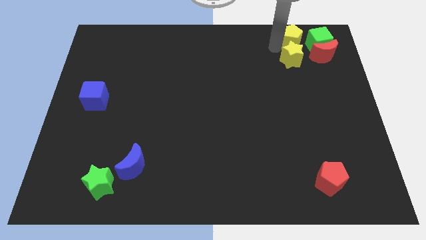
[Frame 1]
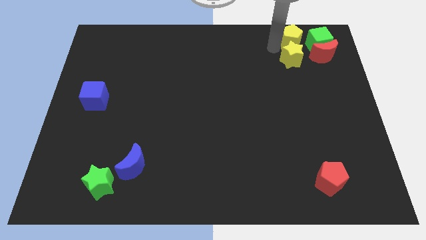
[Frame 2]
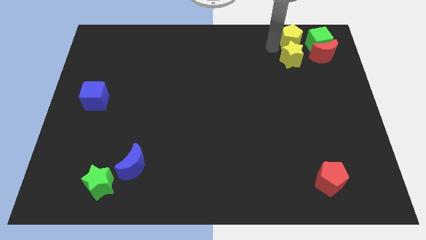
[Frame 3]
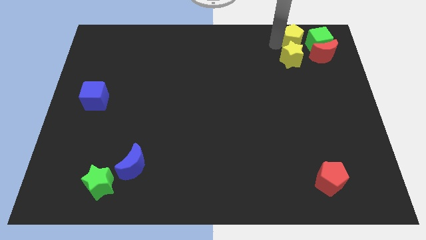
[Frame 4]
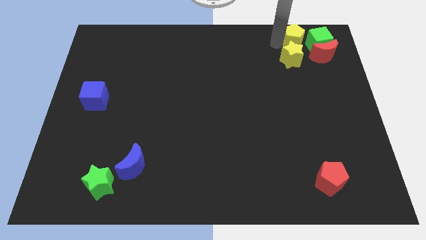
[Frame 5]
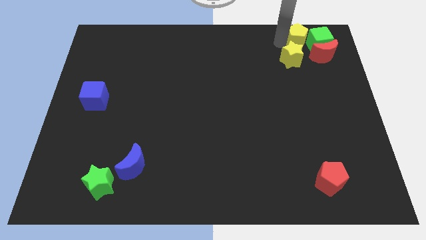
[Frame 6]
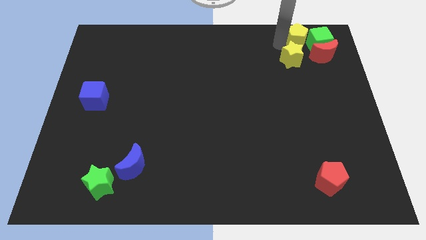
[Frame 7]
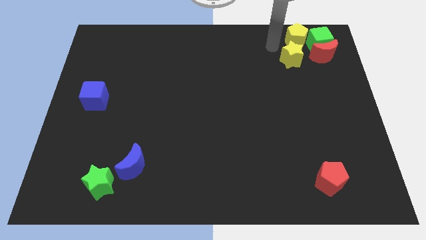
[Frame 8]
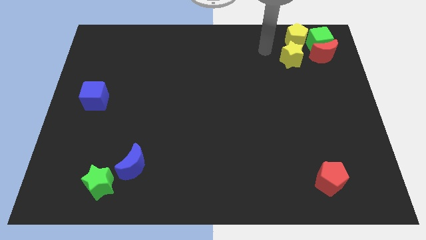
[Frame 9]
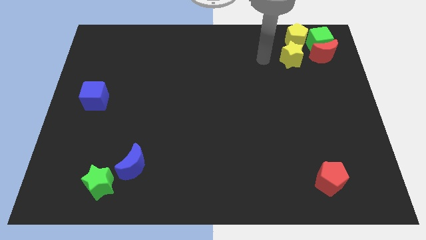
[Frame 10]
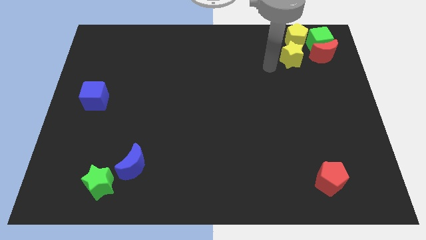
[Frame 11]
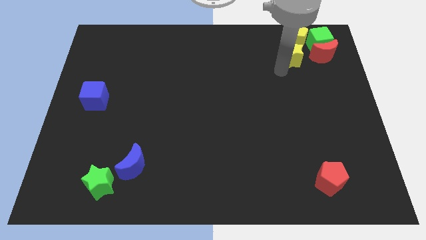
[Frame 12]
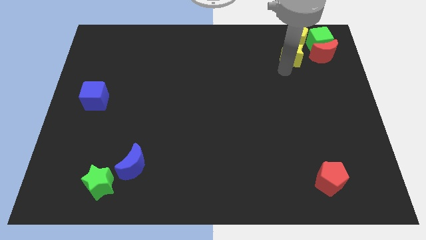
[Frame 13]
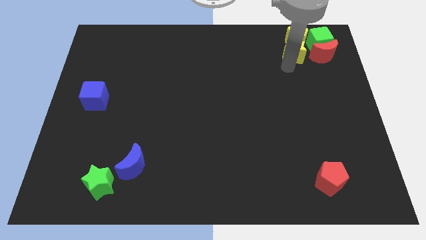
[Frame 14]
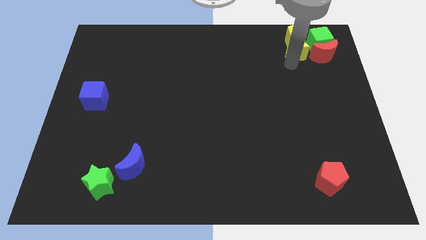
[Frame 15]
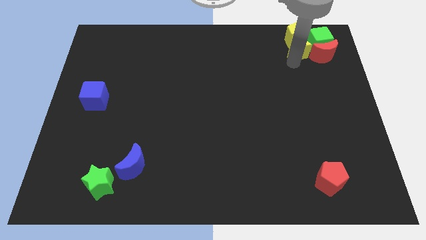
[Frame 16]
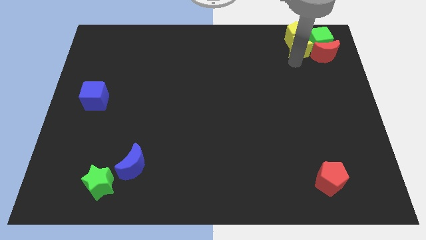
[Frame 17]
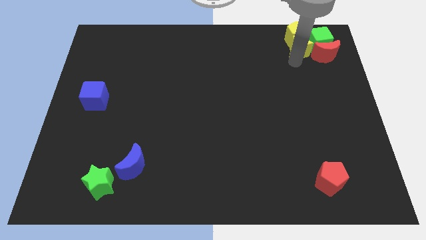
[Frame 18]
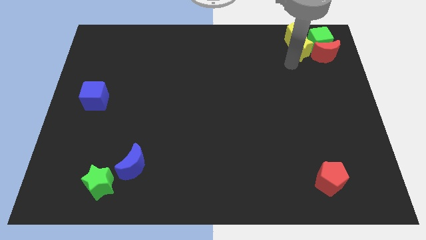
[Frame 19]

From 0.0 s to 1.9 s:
push the yellow blocks into the green cube and red moon

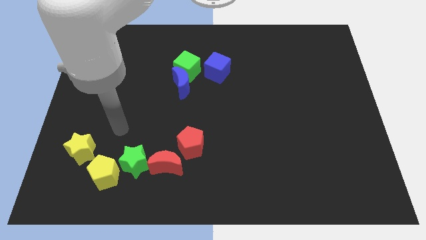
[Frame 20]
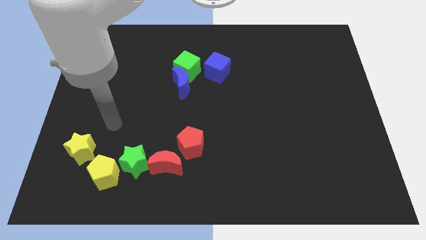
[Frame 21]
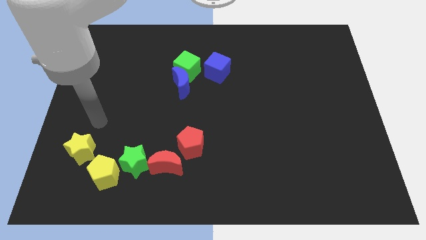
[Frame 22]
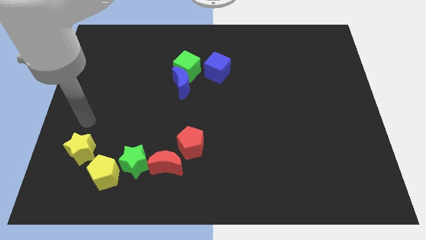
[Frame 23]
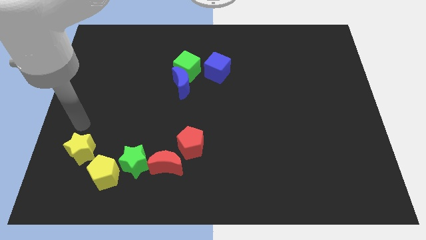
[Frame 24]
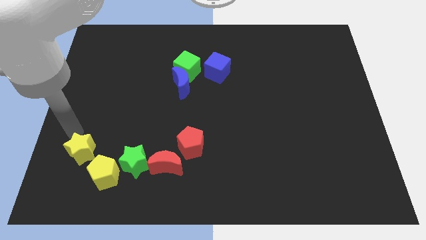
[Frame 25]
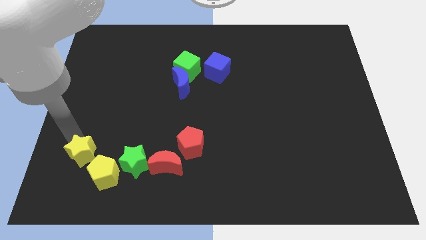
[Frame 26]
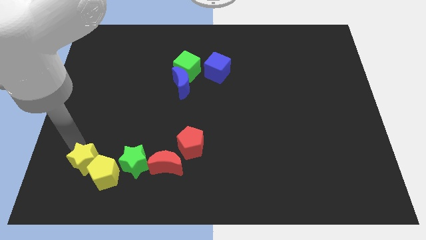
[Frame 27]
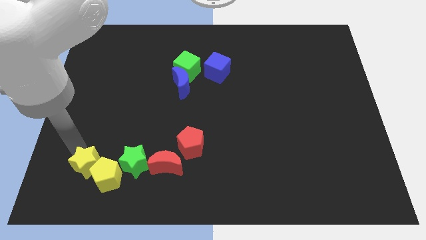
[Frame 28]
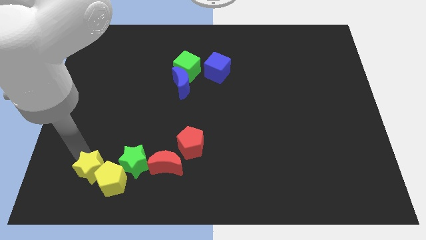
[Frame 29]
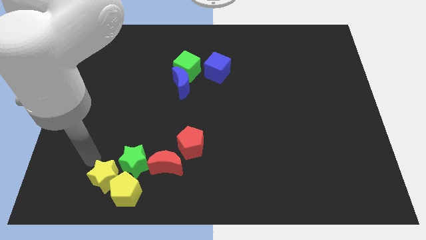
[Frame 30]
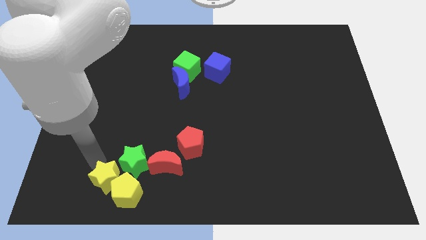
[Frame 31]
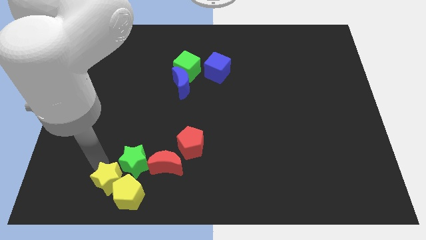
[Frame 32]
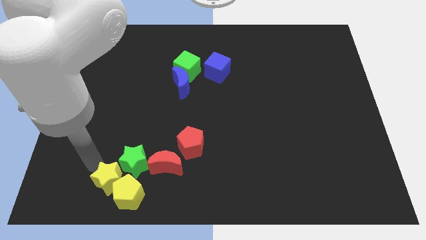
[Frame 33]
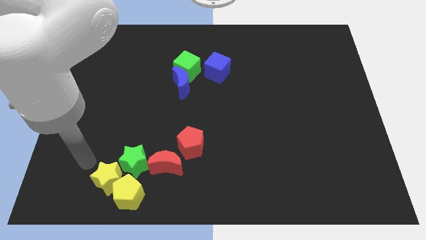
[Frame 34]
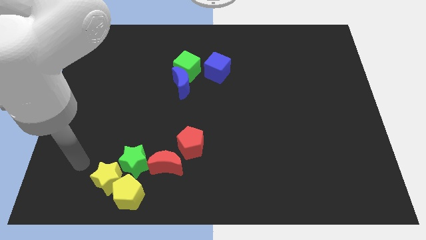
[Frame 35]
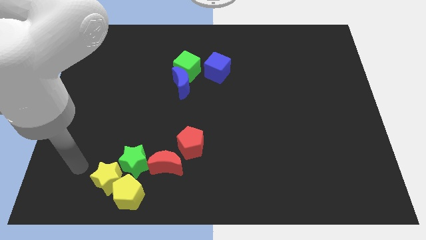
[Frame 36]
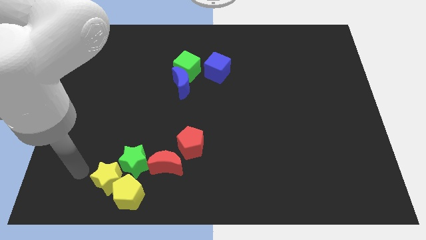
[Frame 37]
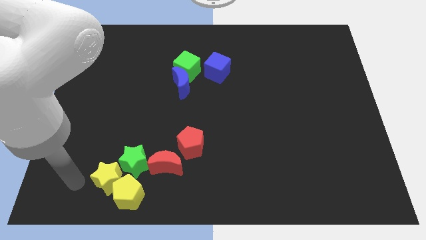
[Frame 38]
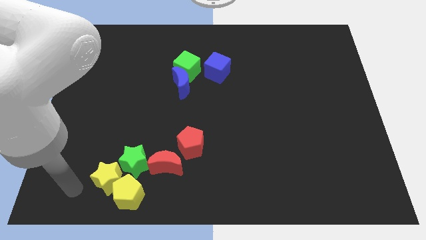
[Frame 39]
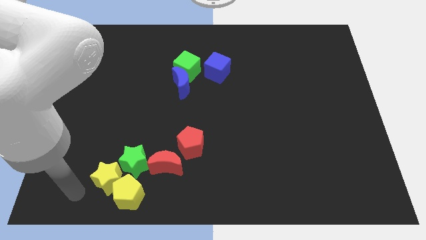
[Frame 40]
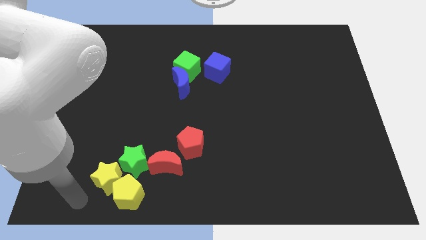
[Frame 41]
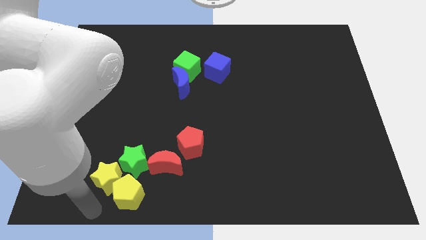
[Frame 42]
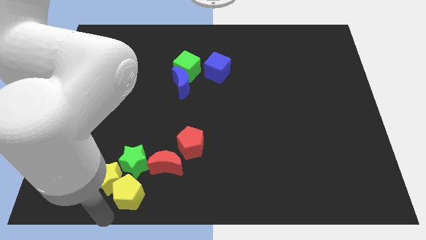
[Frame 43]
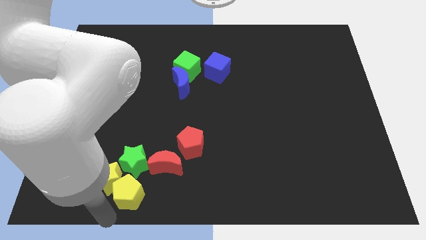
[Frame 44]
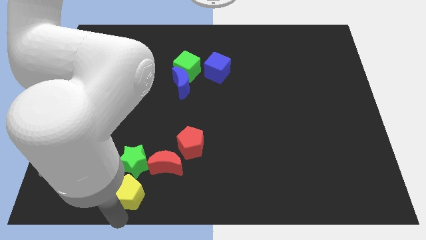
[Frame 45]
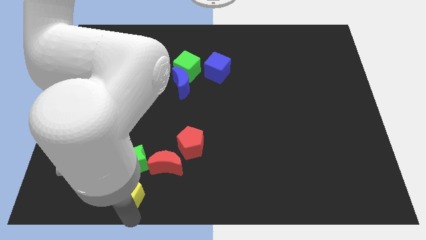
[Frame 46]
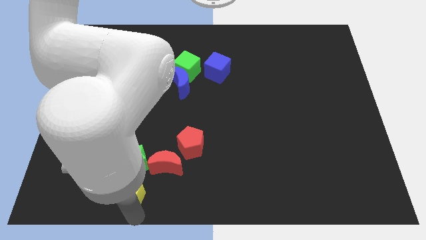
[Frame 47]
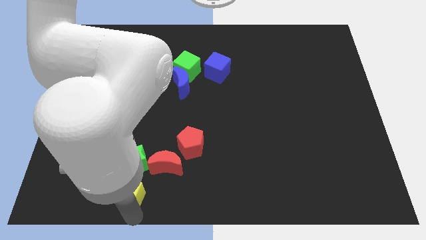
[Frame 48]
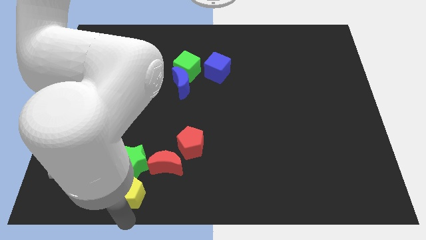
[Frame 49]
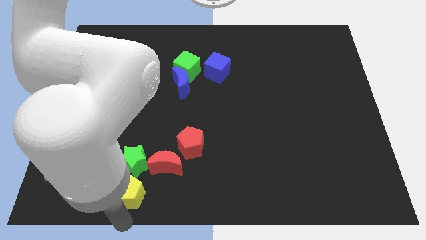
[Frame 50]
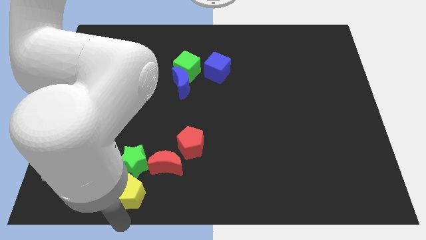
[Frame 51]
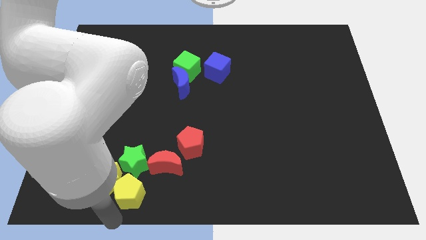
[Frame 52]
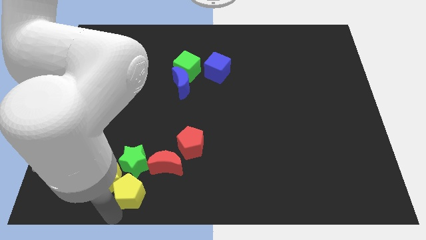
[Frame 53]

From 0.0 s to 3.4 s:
push the yellow star into the yellow pentagon

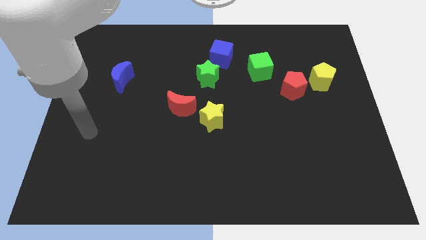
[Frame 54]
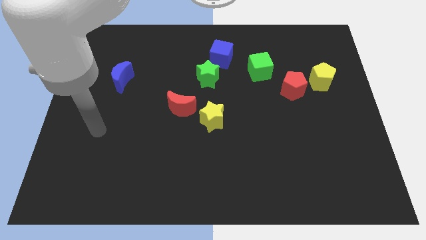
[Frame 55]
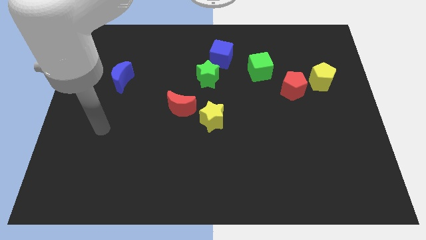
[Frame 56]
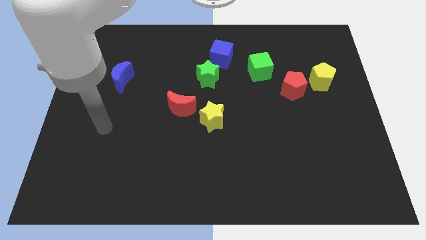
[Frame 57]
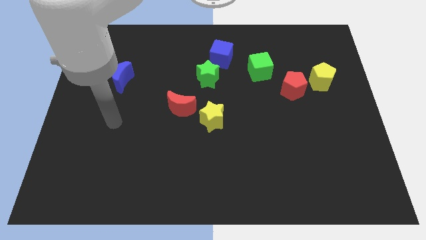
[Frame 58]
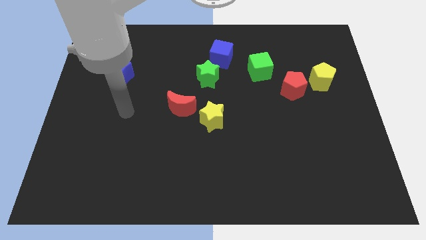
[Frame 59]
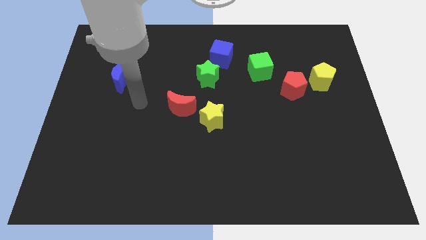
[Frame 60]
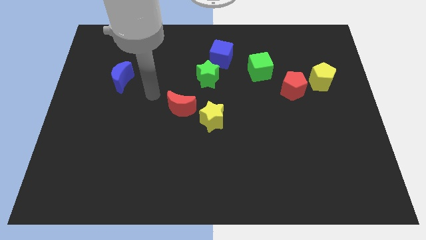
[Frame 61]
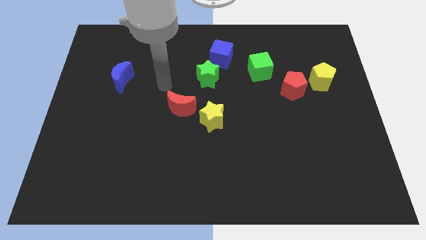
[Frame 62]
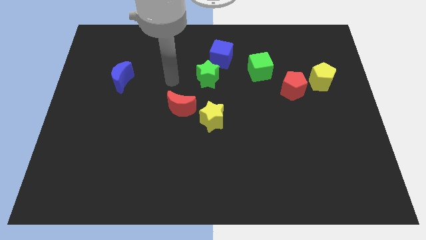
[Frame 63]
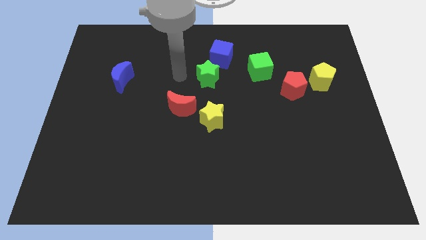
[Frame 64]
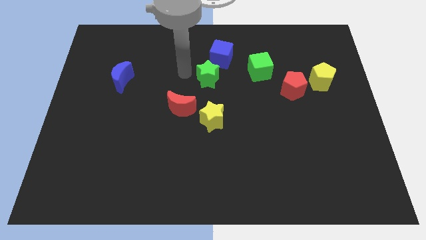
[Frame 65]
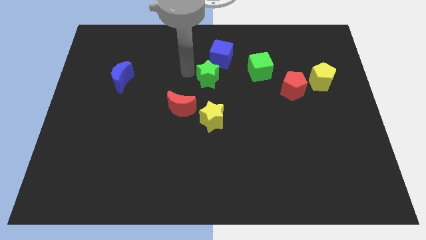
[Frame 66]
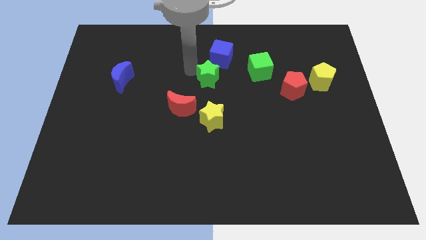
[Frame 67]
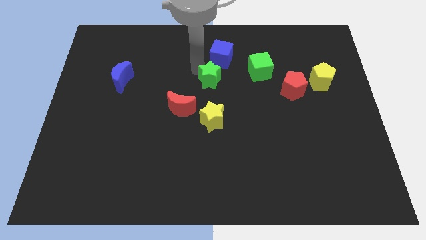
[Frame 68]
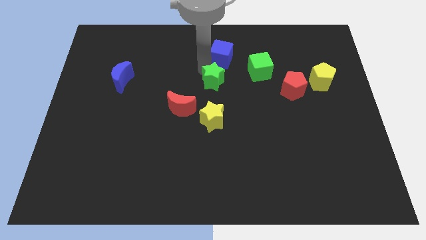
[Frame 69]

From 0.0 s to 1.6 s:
place your arm to the top of the green star

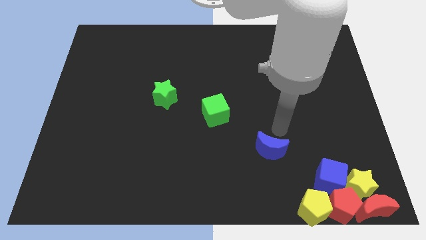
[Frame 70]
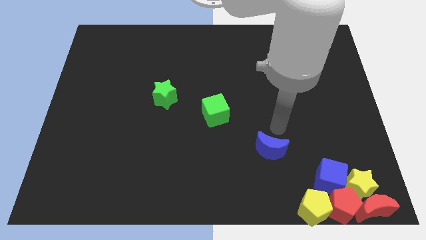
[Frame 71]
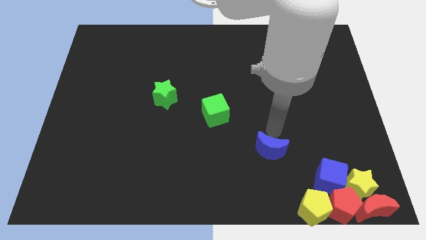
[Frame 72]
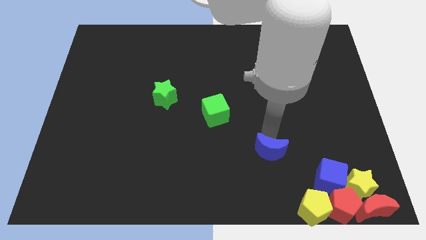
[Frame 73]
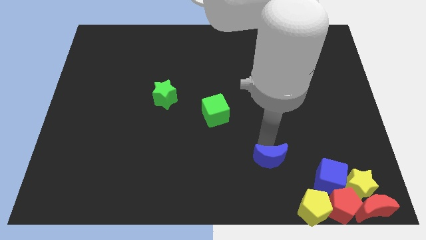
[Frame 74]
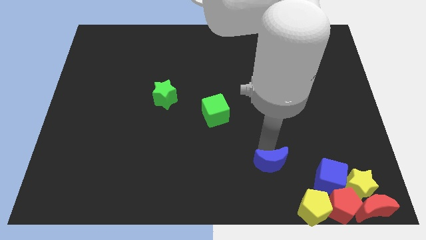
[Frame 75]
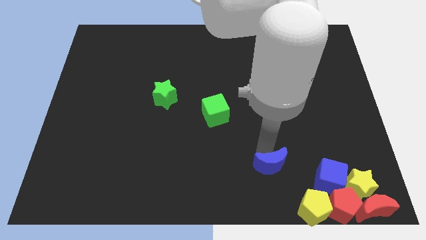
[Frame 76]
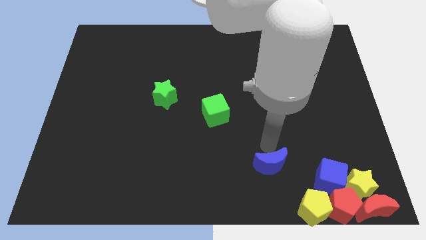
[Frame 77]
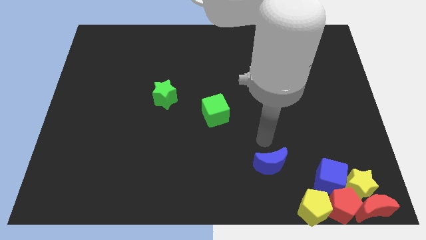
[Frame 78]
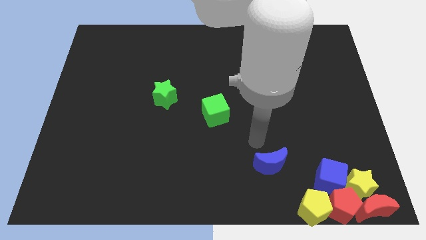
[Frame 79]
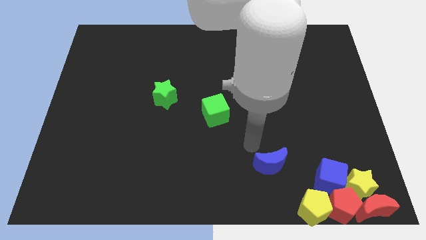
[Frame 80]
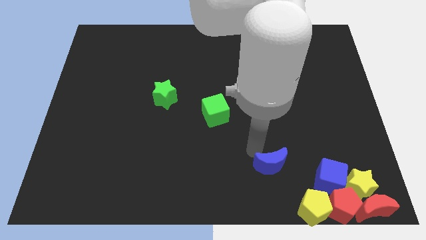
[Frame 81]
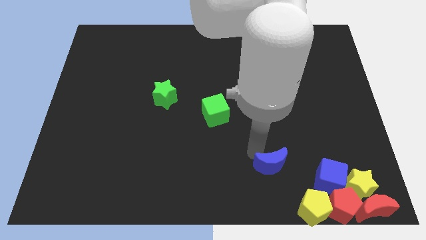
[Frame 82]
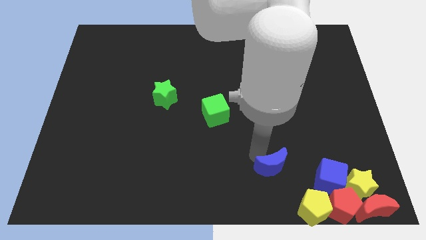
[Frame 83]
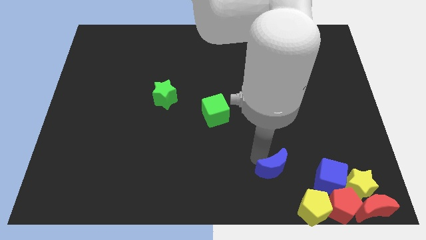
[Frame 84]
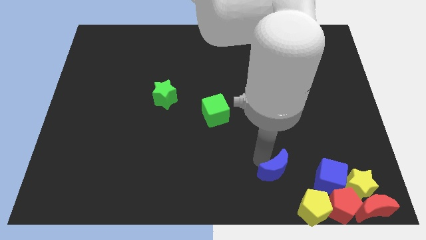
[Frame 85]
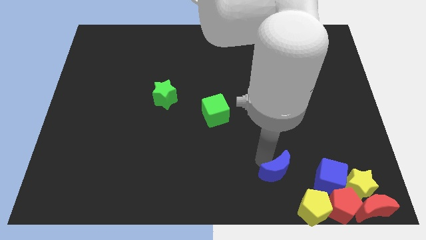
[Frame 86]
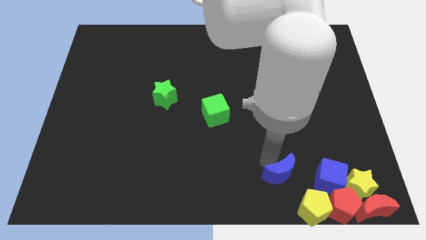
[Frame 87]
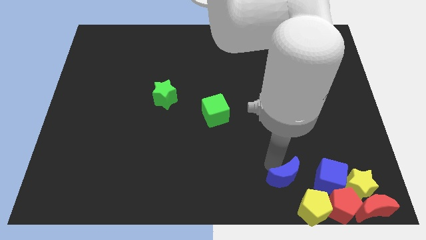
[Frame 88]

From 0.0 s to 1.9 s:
move the blue moon left to the blue cube

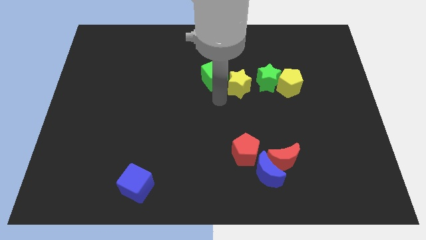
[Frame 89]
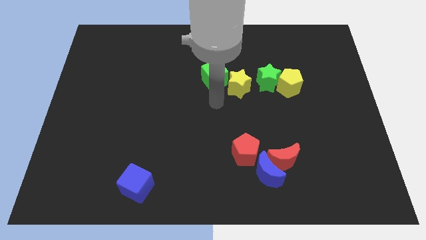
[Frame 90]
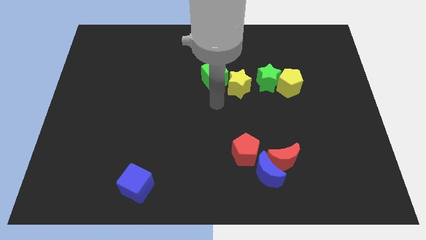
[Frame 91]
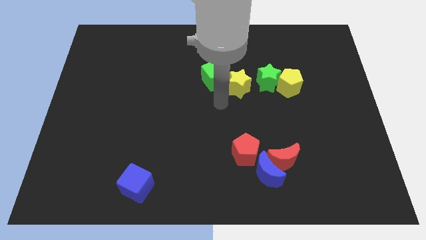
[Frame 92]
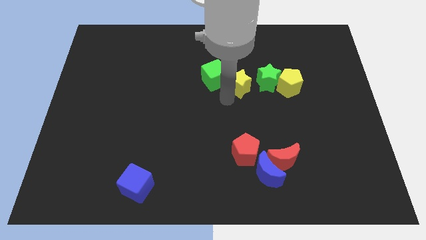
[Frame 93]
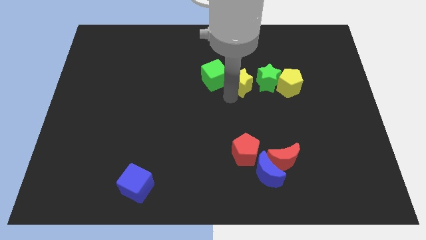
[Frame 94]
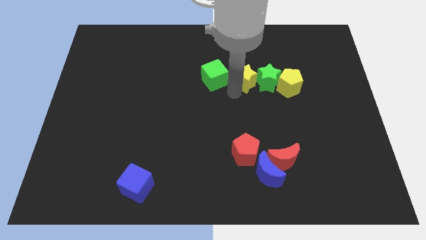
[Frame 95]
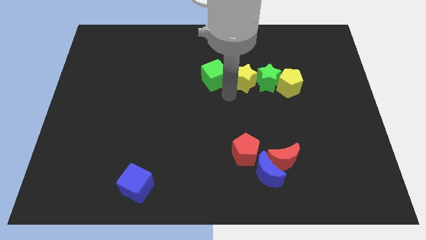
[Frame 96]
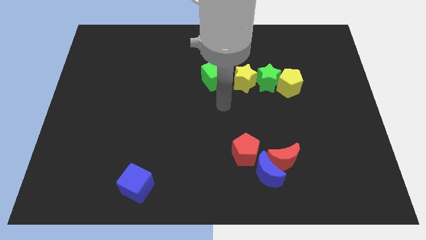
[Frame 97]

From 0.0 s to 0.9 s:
move the yellow star close to the green star
